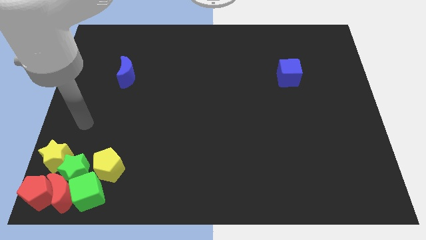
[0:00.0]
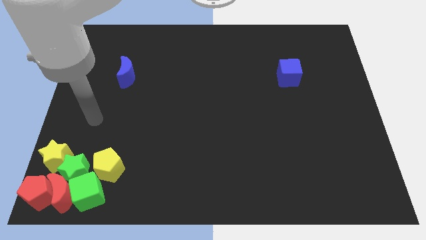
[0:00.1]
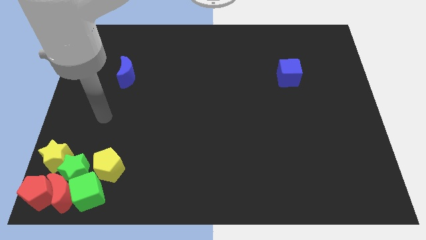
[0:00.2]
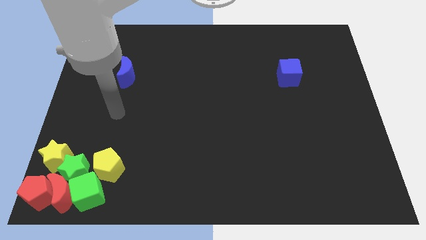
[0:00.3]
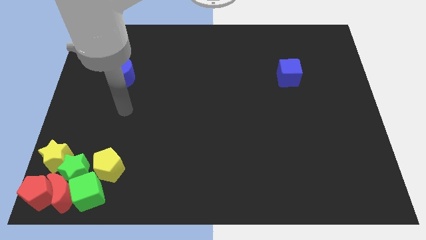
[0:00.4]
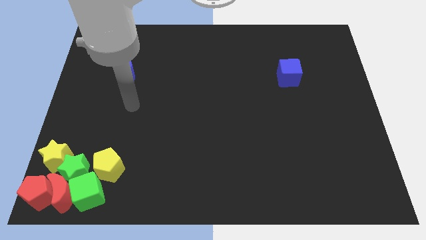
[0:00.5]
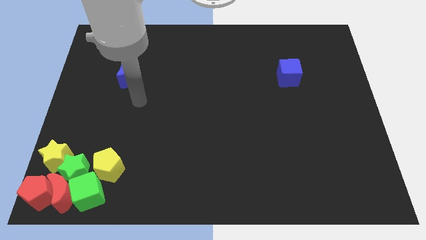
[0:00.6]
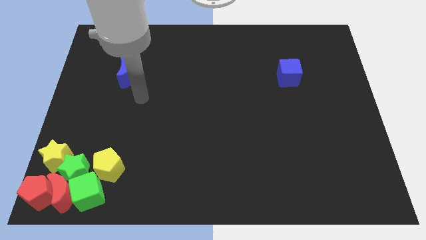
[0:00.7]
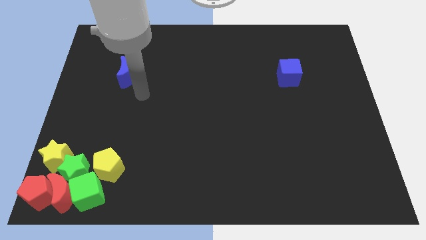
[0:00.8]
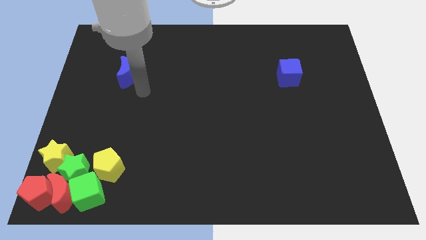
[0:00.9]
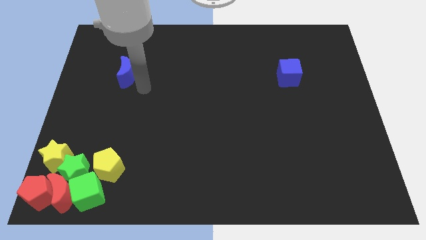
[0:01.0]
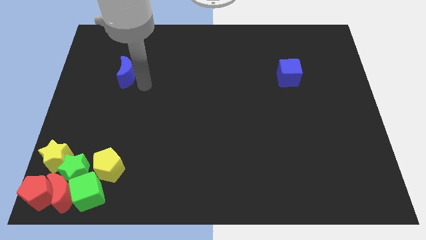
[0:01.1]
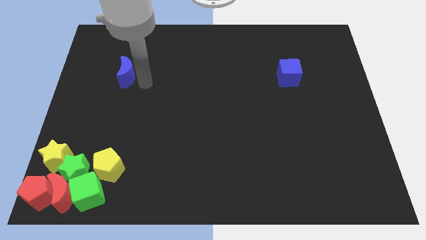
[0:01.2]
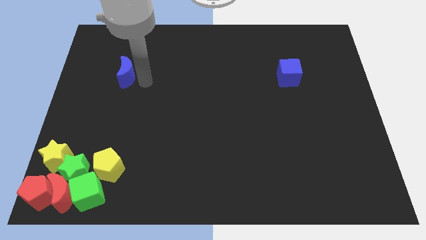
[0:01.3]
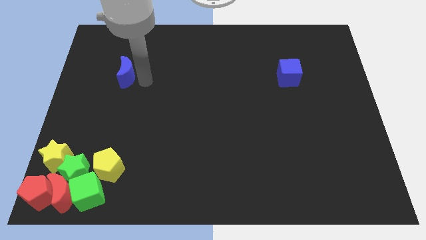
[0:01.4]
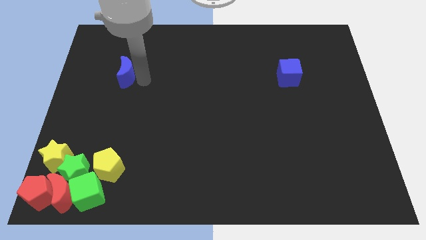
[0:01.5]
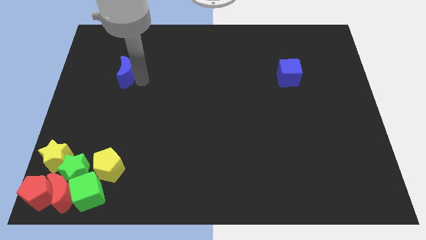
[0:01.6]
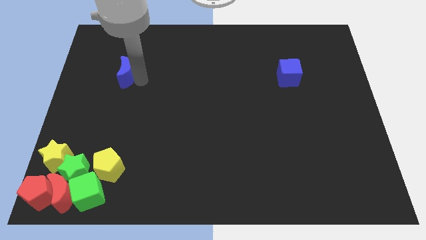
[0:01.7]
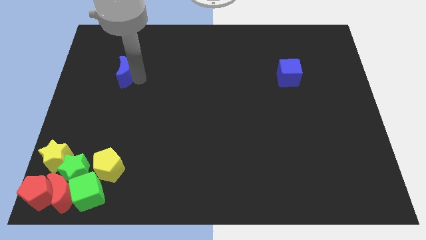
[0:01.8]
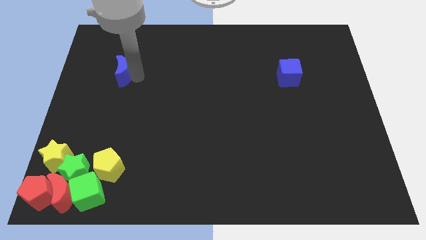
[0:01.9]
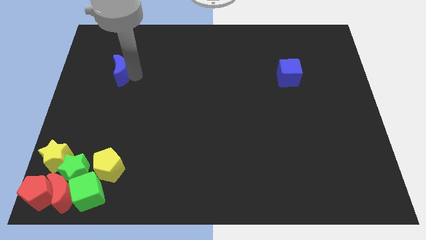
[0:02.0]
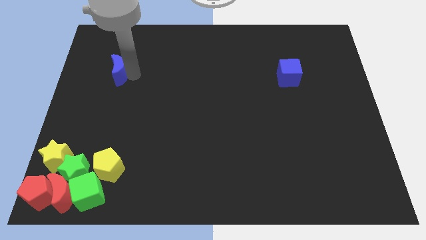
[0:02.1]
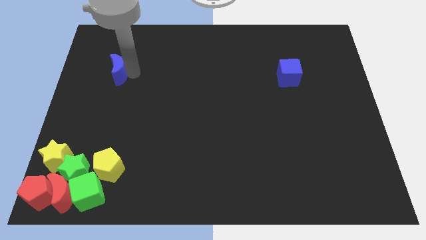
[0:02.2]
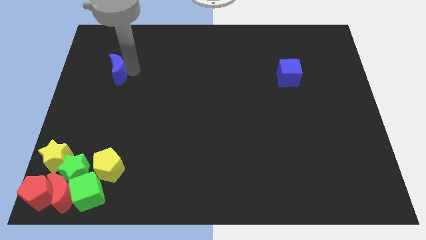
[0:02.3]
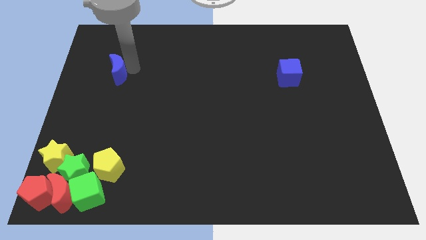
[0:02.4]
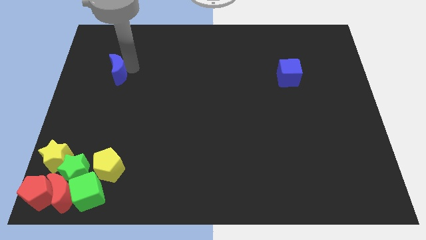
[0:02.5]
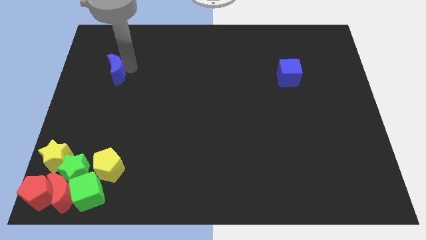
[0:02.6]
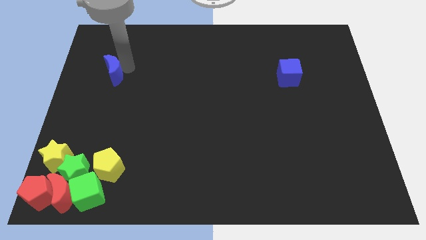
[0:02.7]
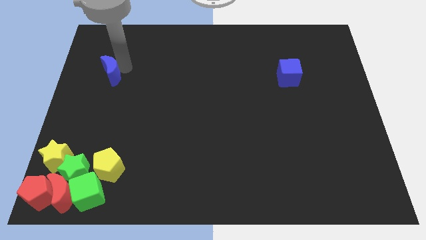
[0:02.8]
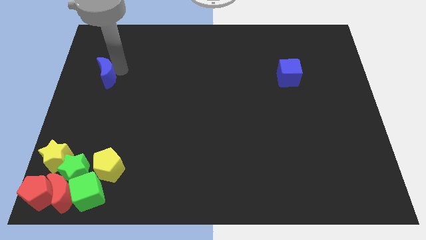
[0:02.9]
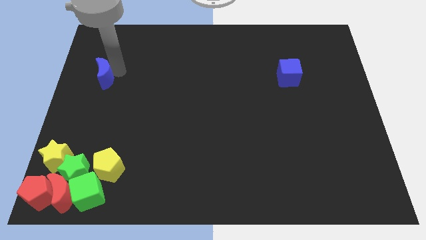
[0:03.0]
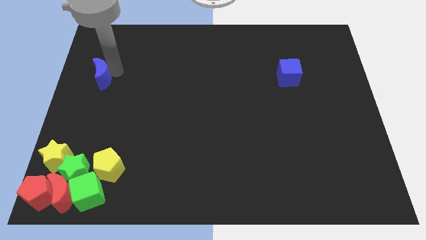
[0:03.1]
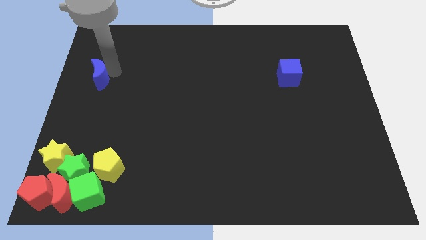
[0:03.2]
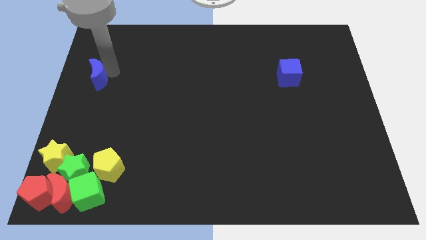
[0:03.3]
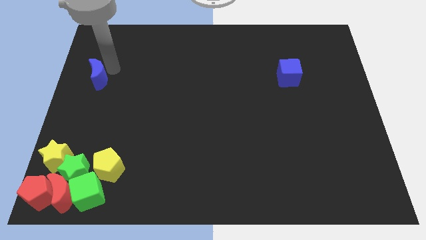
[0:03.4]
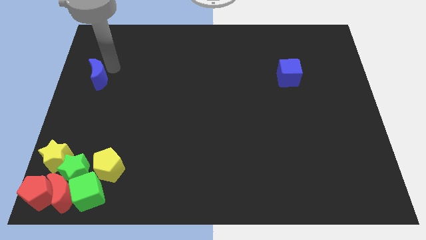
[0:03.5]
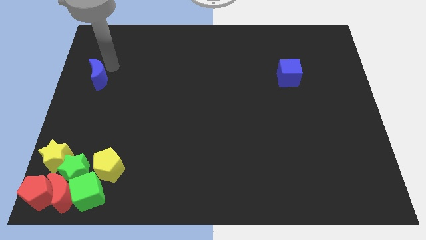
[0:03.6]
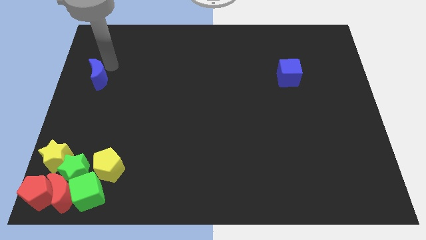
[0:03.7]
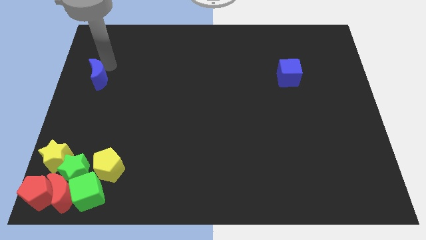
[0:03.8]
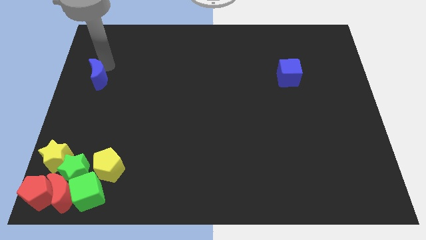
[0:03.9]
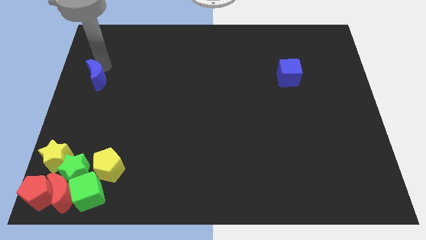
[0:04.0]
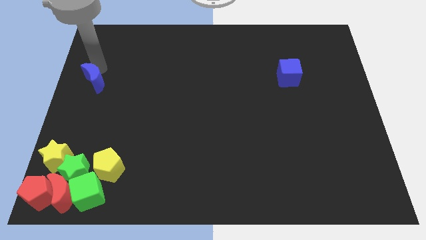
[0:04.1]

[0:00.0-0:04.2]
move the blue crescent slightly to the left

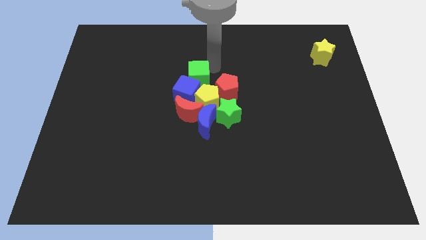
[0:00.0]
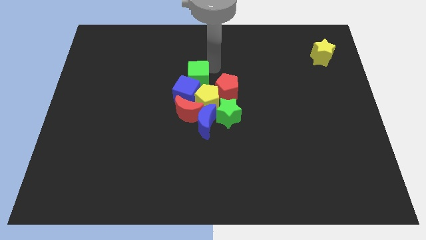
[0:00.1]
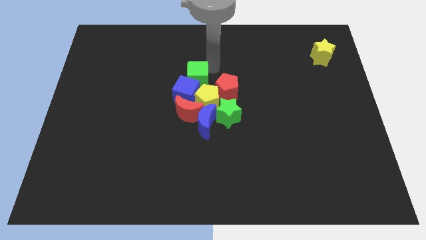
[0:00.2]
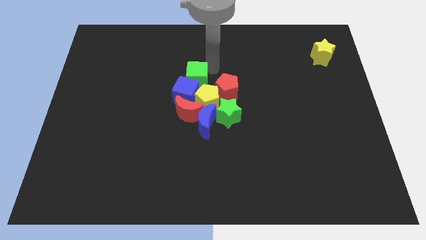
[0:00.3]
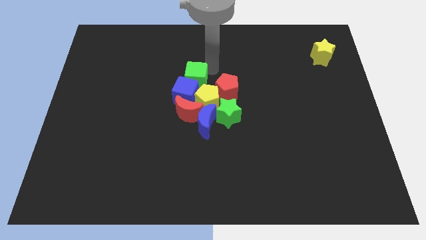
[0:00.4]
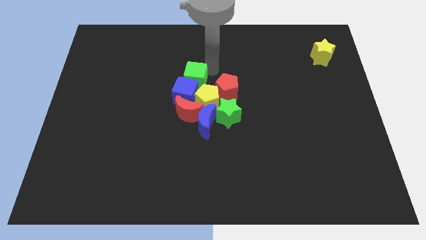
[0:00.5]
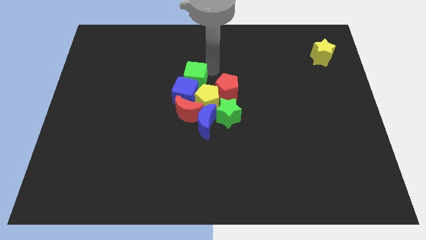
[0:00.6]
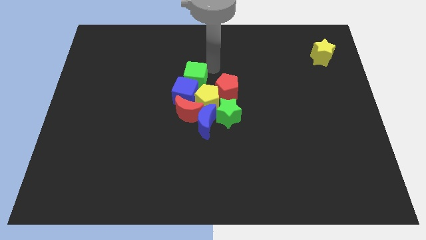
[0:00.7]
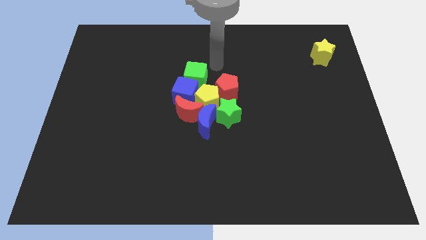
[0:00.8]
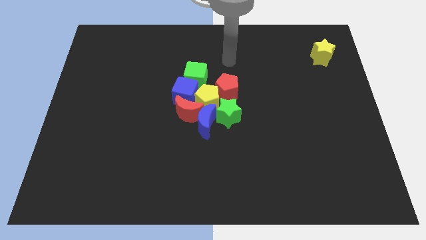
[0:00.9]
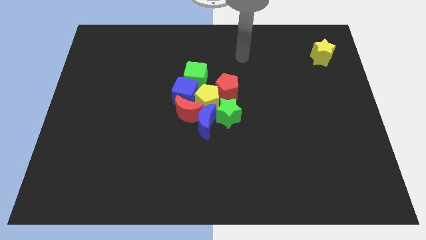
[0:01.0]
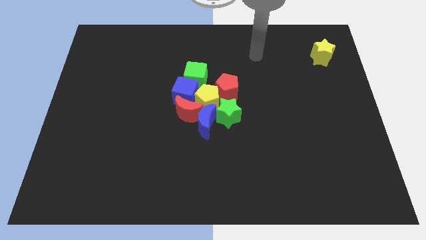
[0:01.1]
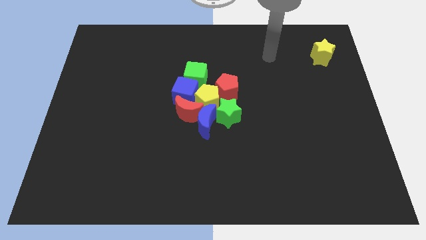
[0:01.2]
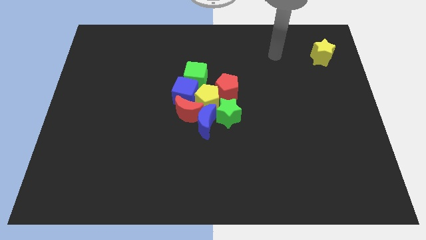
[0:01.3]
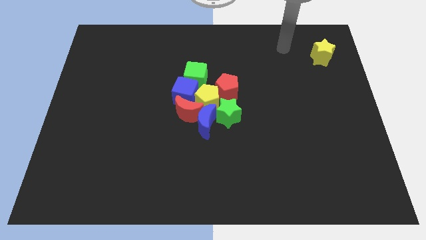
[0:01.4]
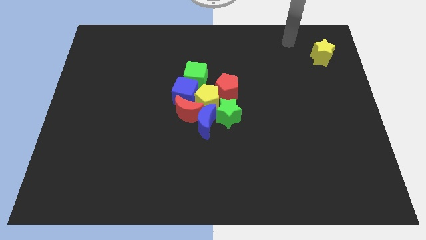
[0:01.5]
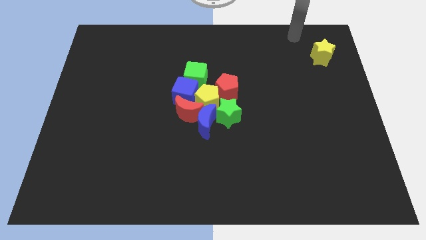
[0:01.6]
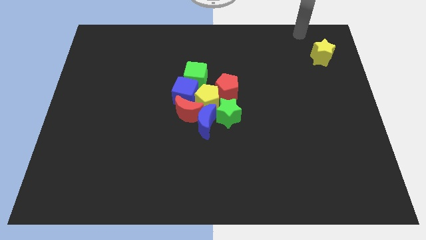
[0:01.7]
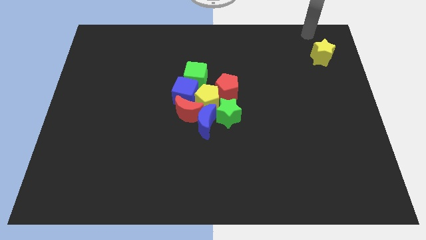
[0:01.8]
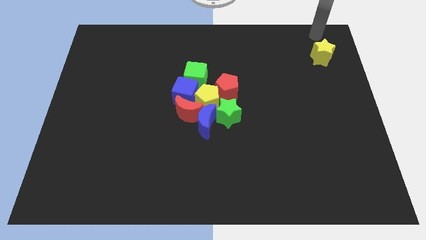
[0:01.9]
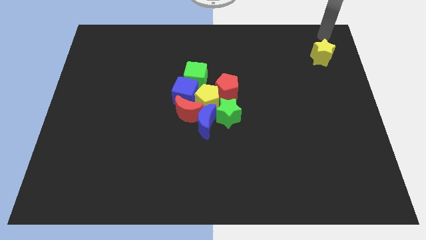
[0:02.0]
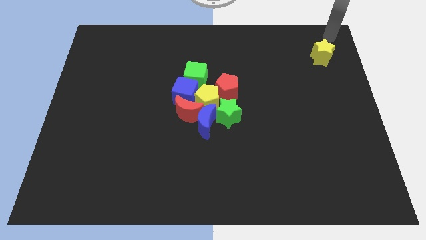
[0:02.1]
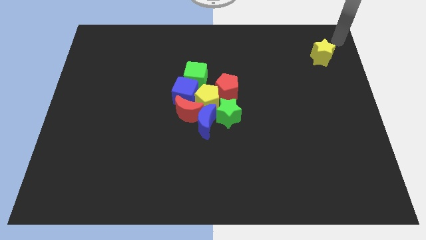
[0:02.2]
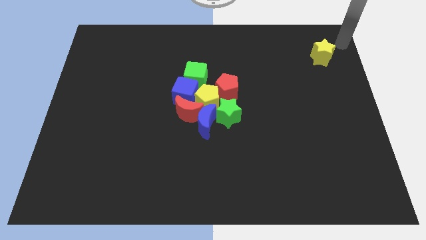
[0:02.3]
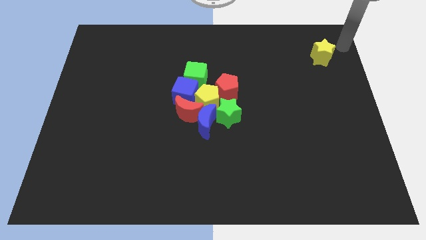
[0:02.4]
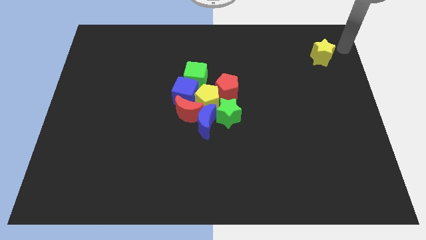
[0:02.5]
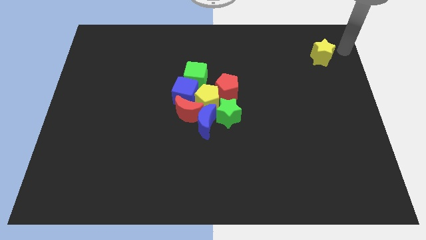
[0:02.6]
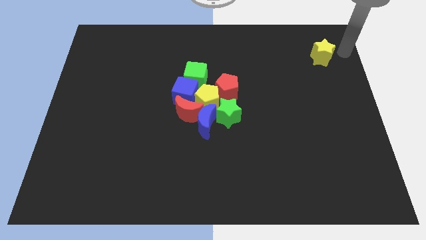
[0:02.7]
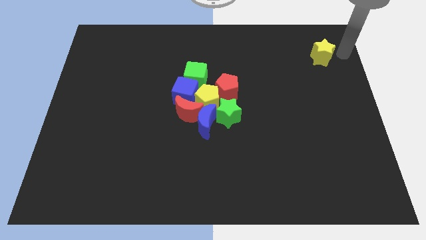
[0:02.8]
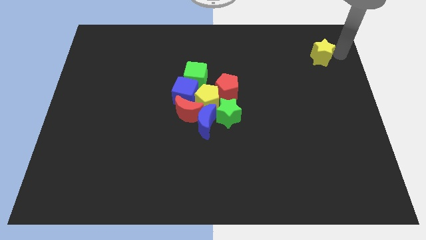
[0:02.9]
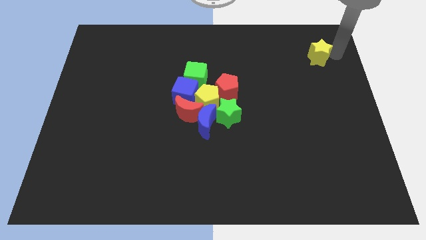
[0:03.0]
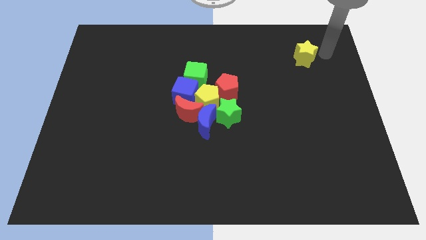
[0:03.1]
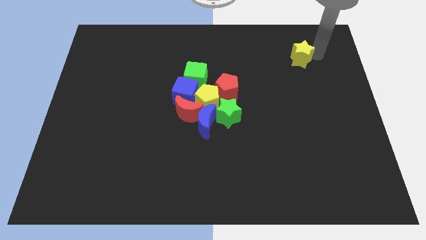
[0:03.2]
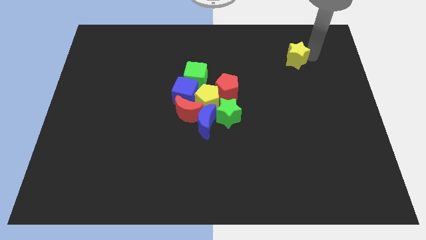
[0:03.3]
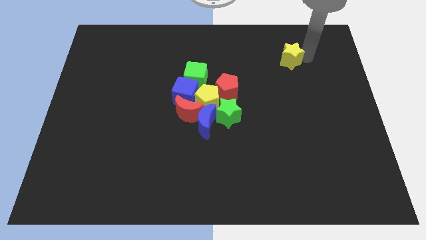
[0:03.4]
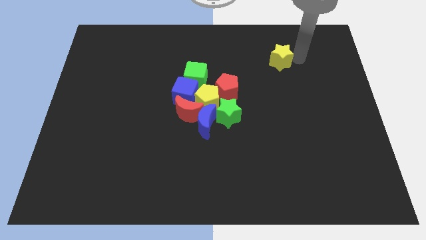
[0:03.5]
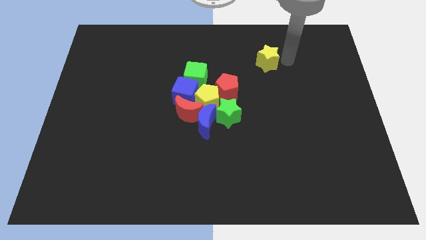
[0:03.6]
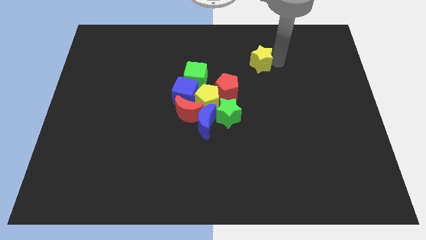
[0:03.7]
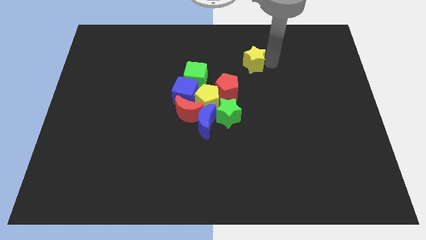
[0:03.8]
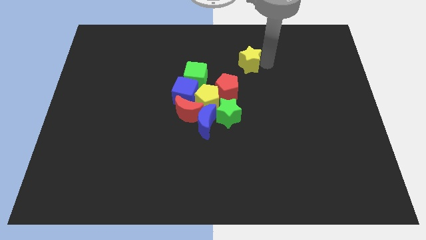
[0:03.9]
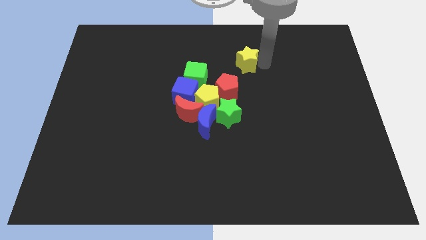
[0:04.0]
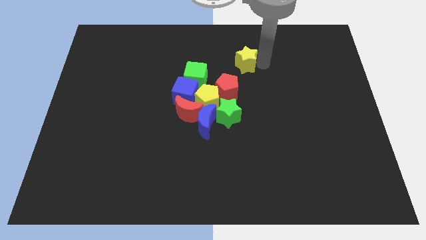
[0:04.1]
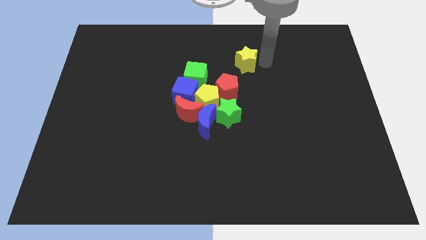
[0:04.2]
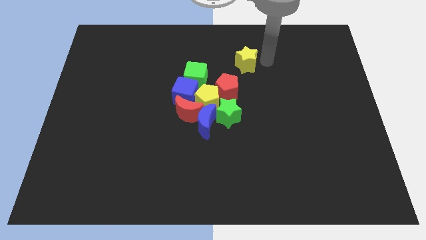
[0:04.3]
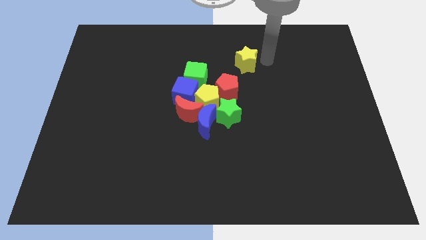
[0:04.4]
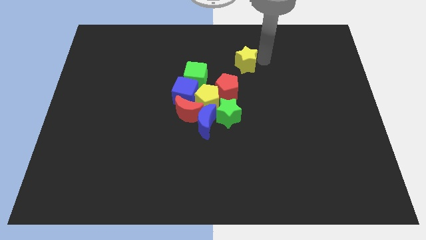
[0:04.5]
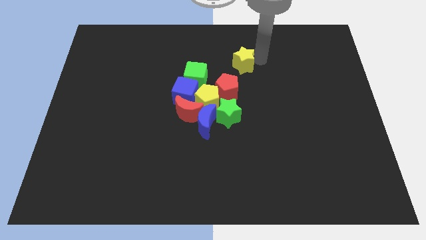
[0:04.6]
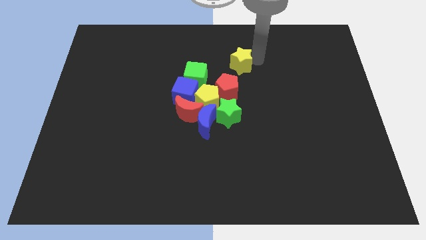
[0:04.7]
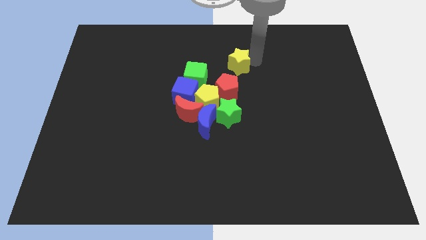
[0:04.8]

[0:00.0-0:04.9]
move the yellow star close to the red pentagon
